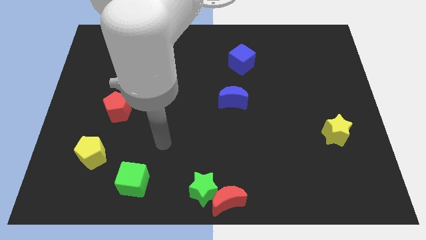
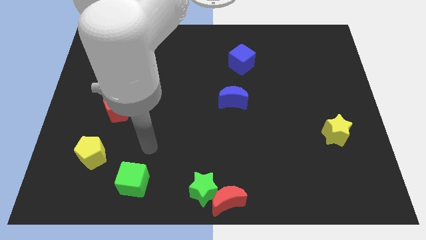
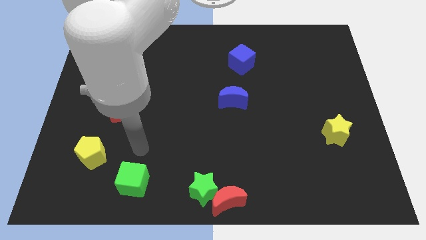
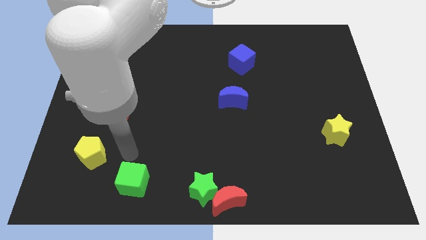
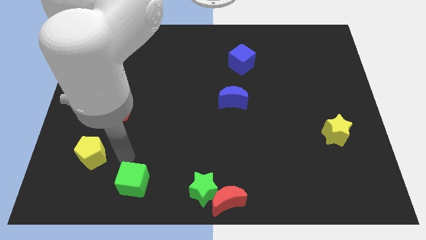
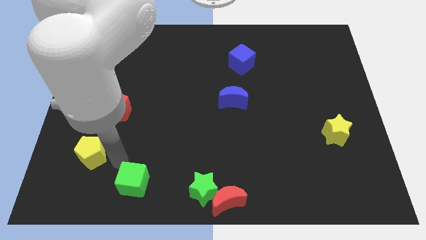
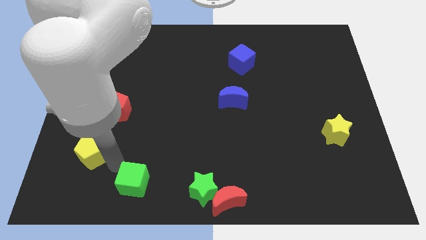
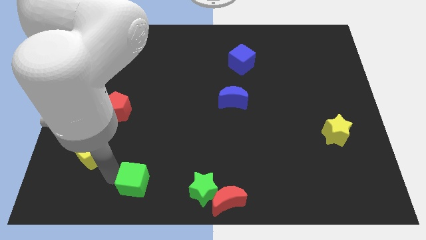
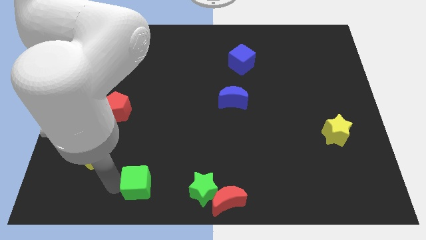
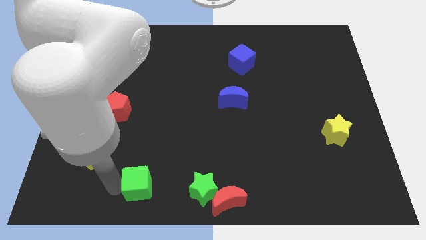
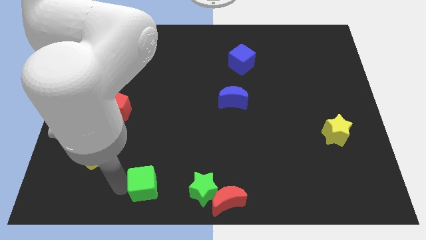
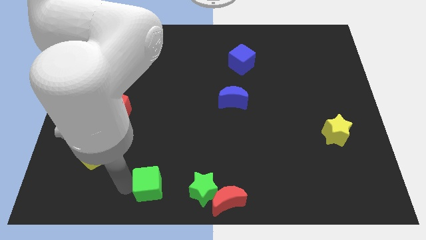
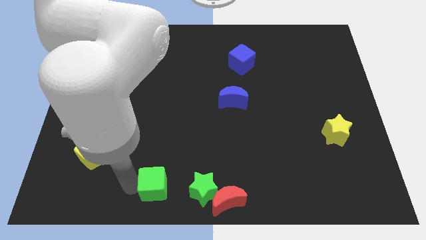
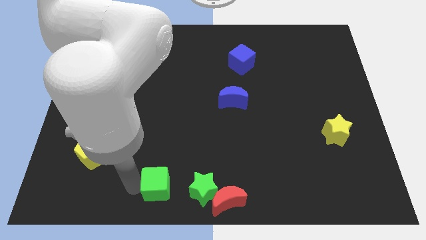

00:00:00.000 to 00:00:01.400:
drag green cube towards the green star

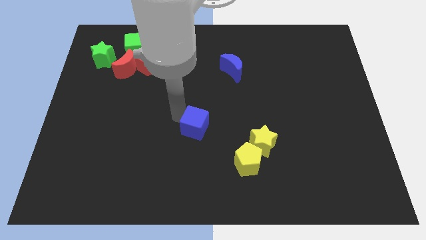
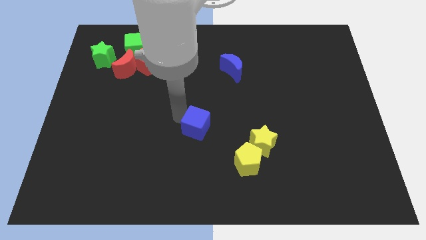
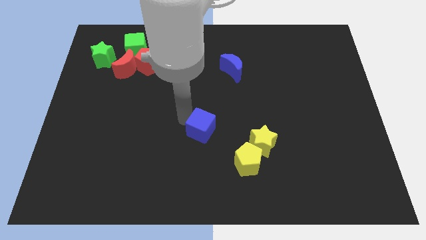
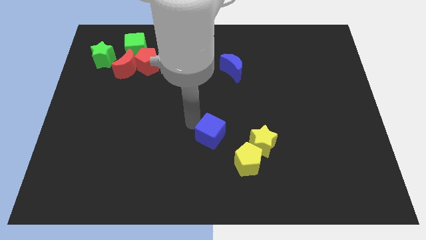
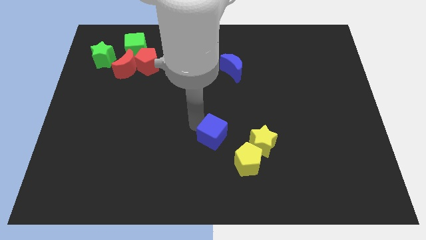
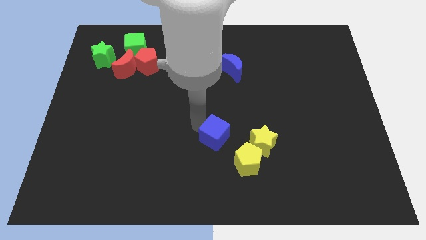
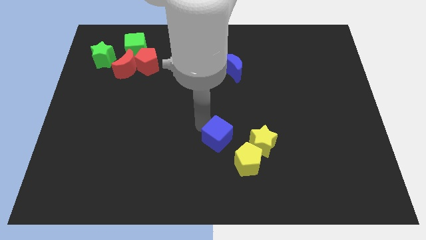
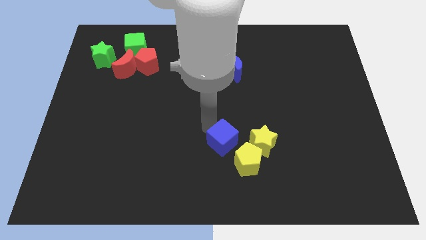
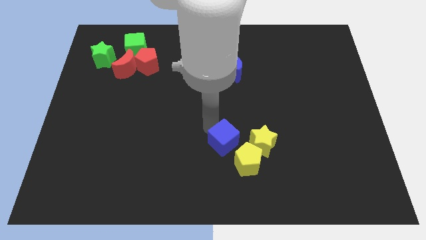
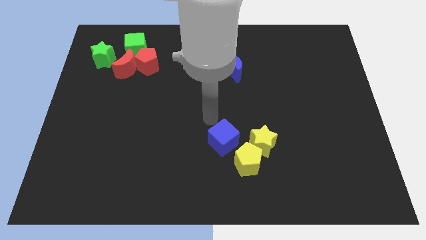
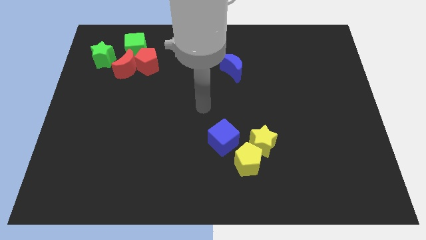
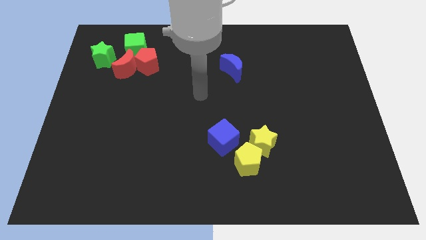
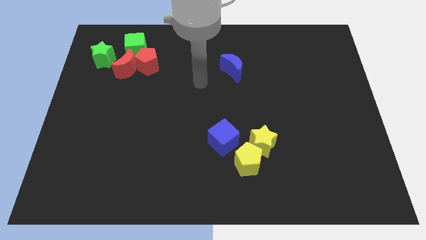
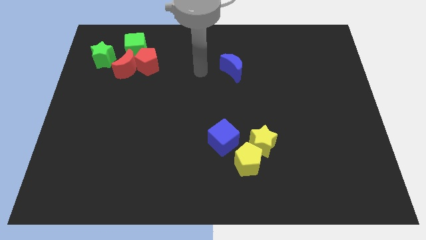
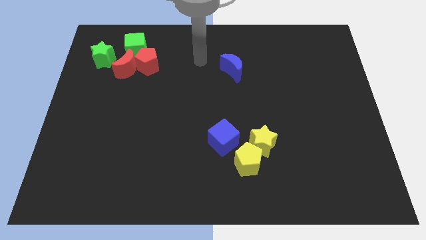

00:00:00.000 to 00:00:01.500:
move the blue cube towards the yellow pentagon

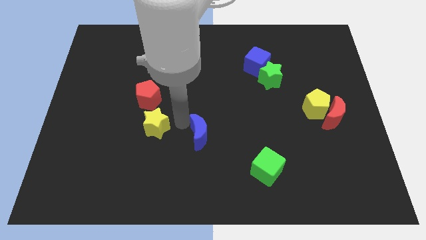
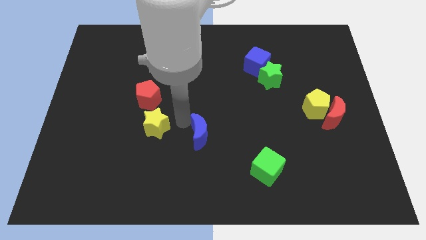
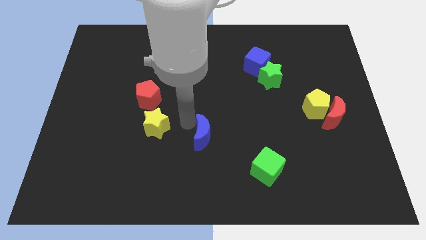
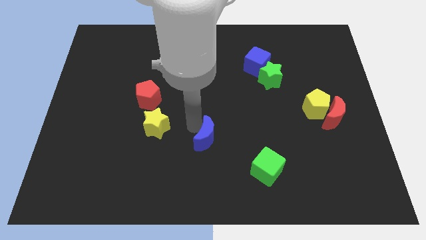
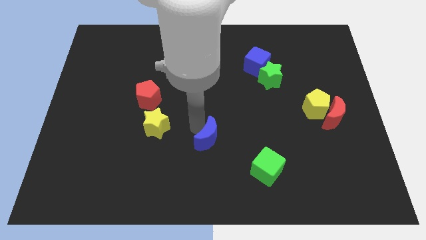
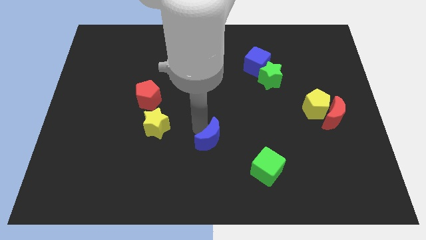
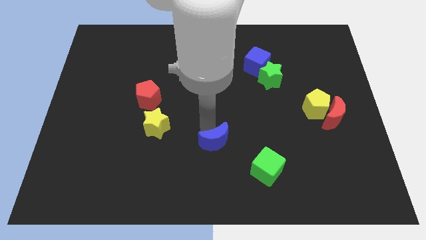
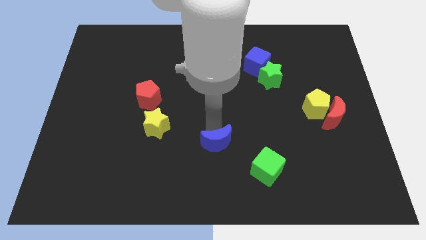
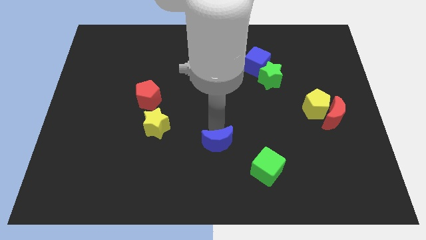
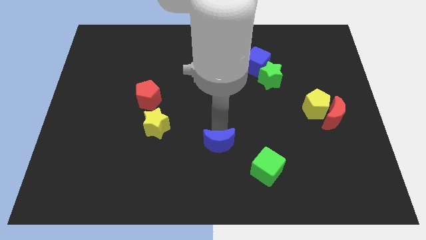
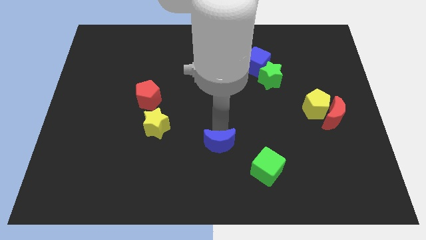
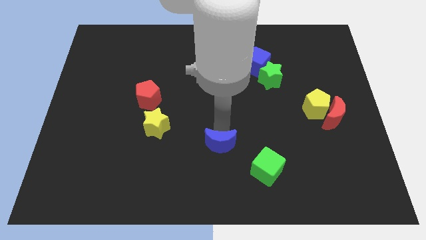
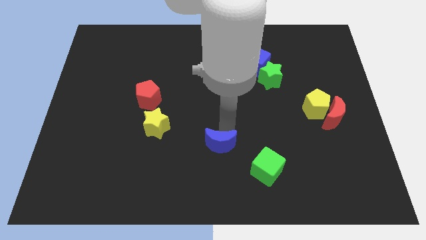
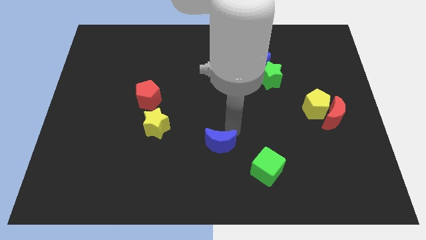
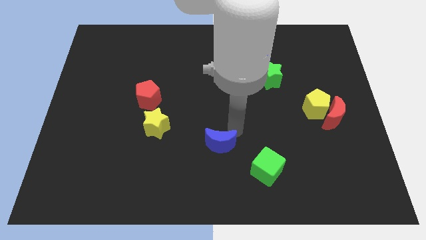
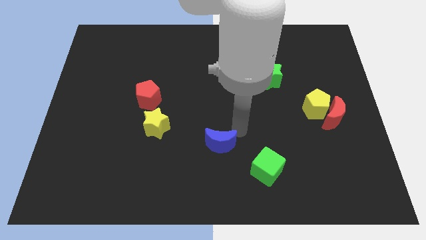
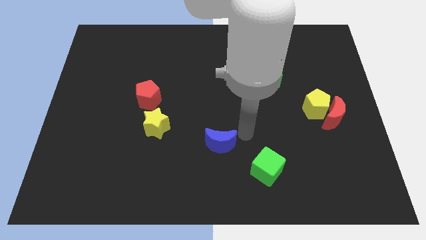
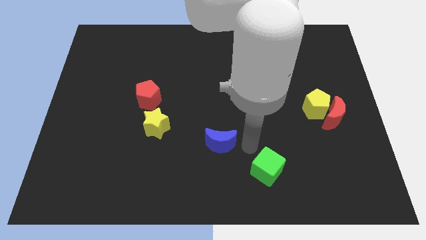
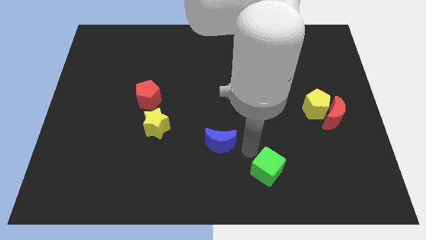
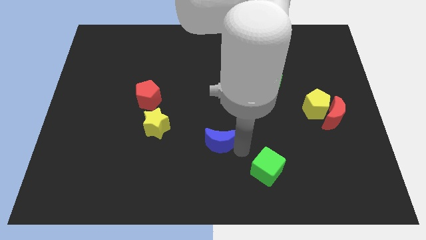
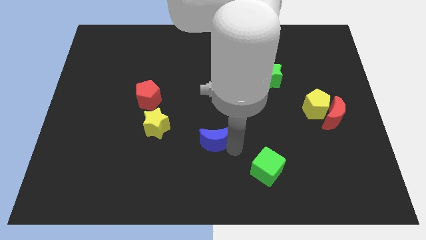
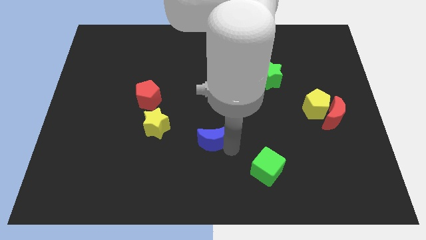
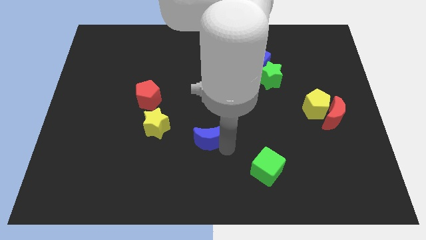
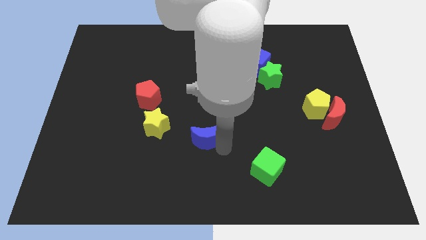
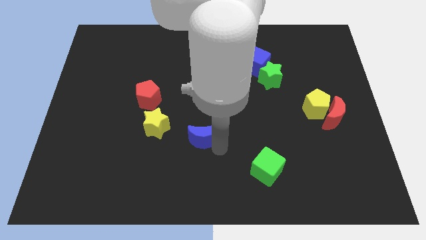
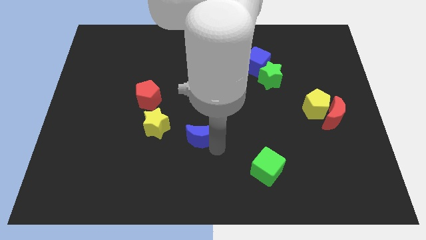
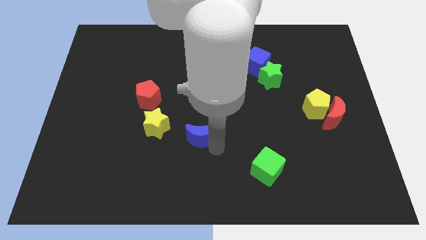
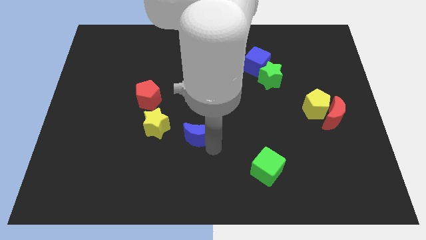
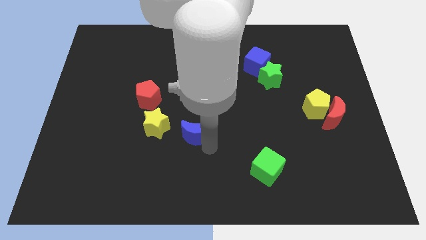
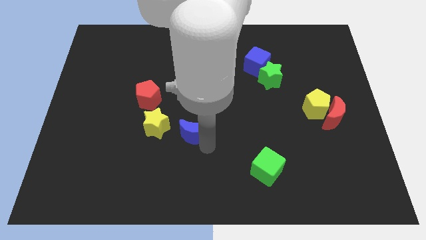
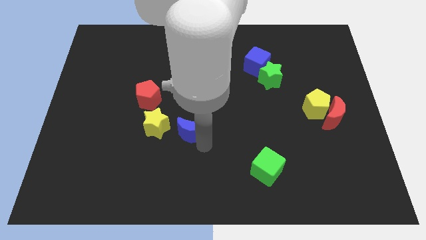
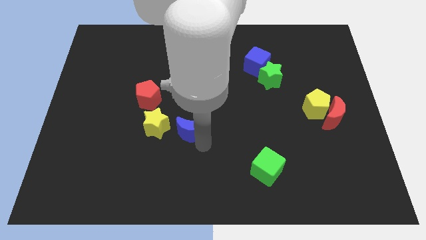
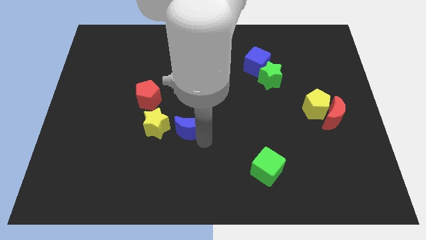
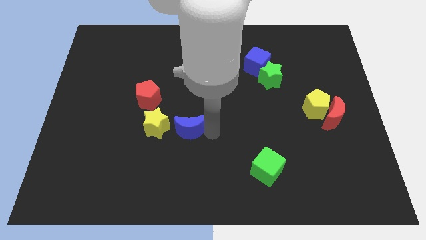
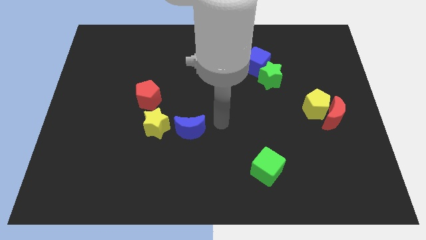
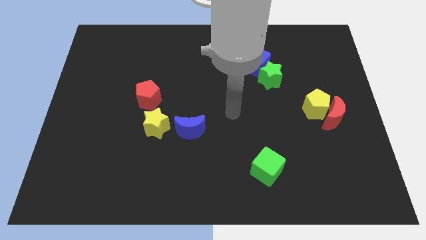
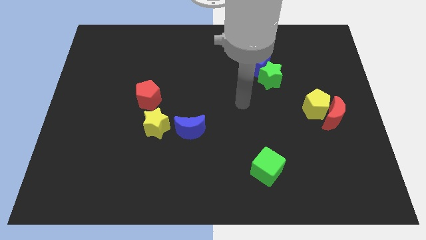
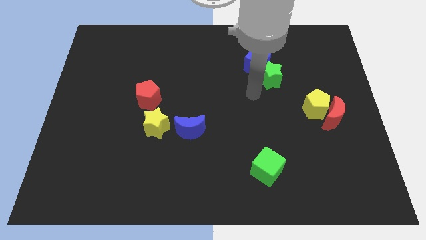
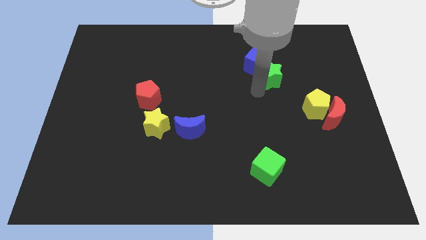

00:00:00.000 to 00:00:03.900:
move the blue moon right to the yellow star

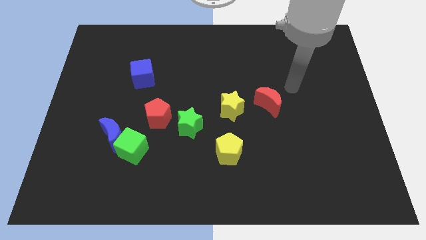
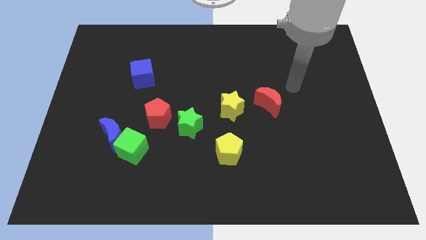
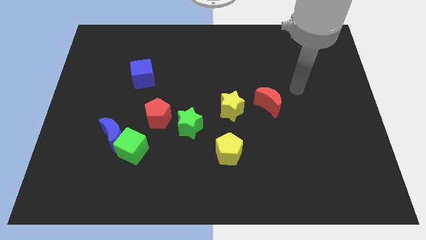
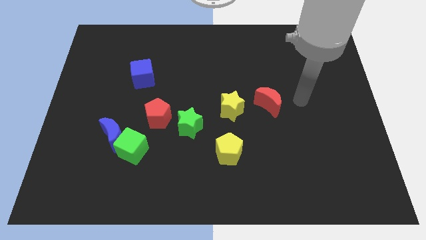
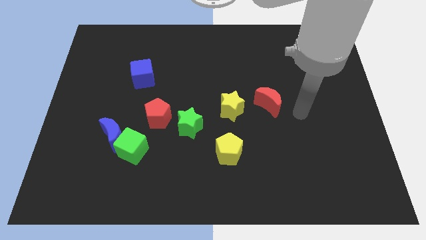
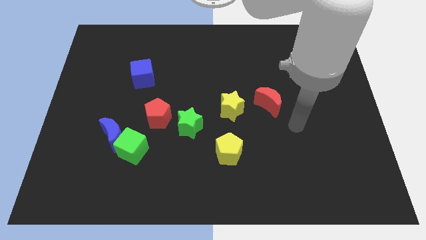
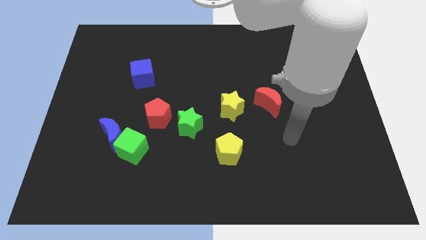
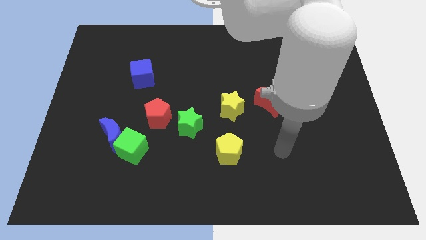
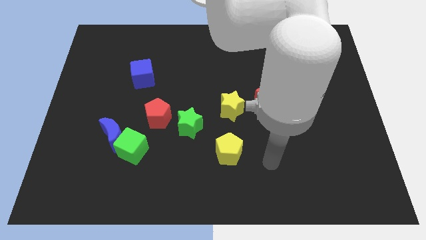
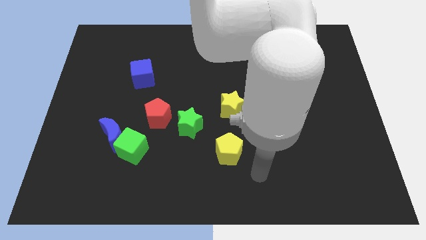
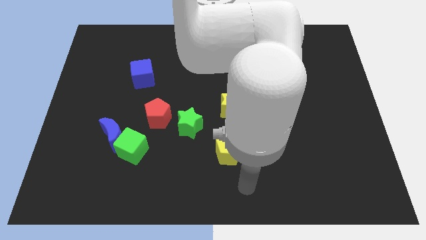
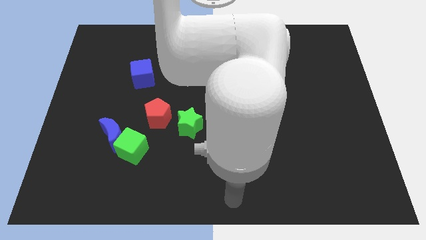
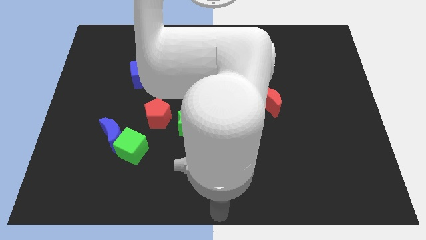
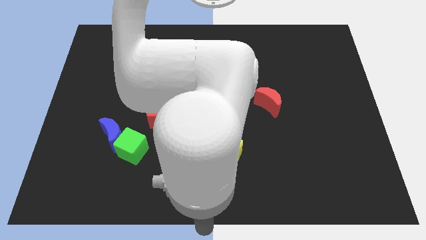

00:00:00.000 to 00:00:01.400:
go to the bottom center of the table

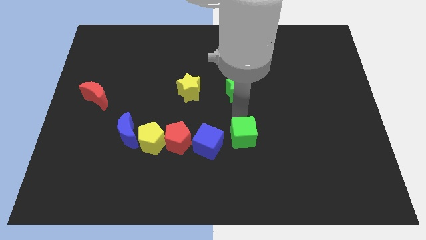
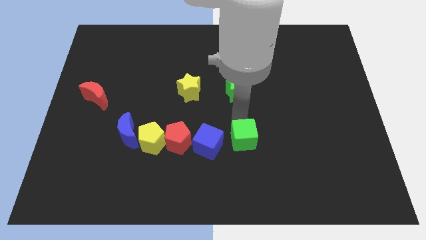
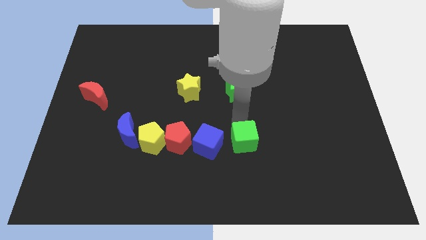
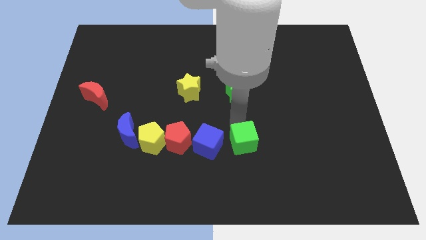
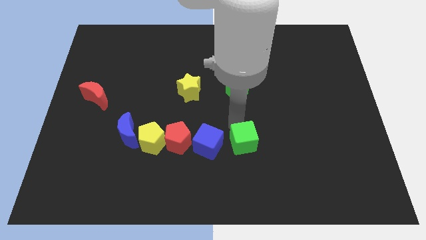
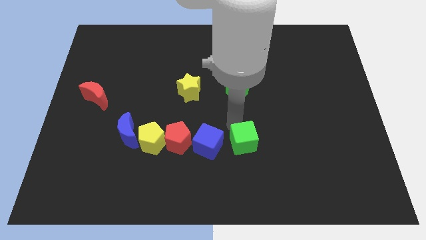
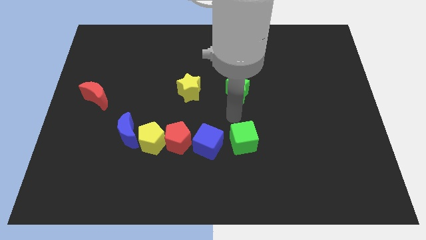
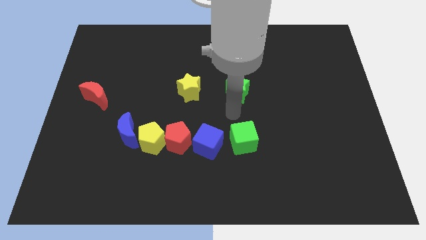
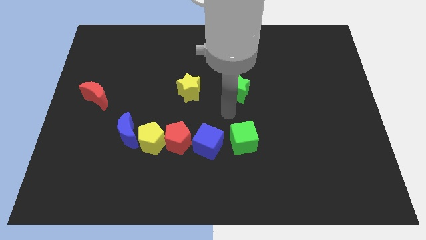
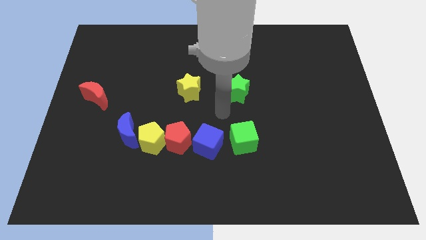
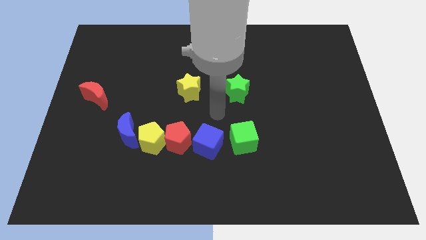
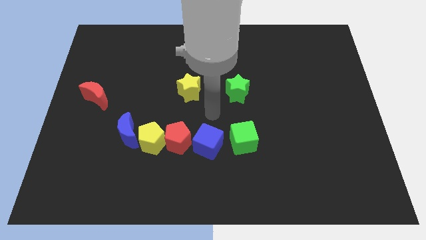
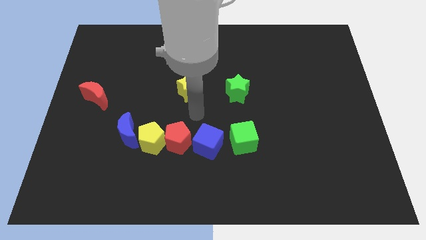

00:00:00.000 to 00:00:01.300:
move the green cube vertically to the bottom of the green star
